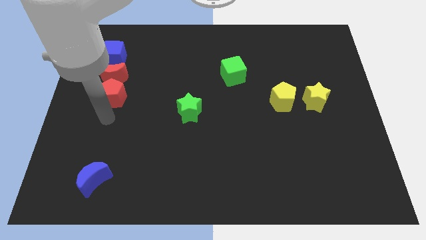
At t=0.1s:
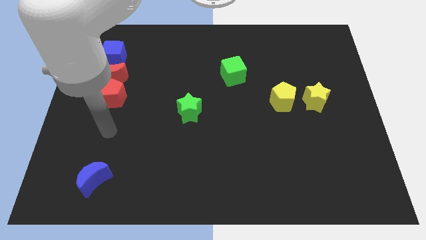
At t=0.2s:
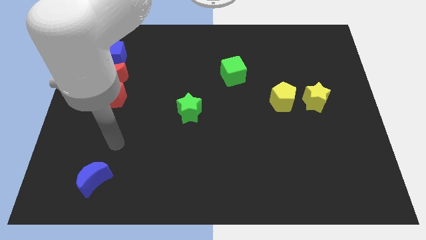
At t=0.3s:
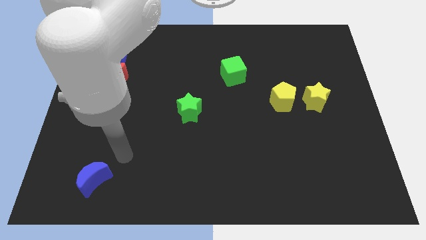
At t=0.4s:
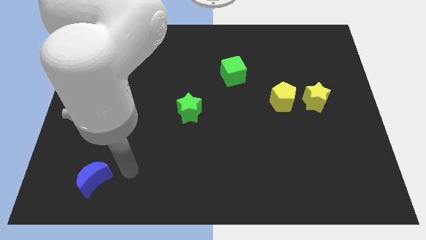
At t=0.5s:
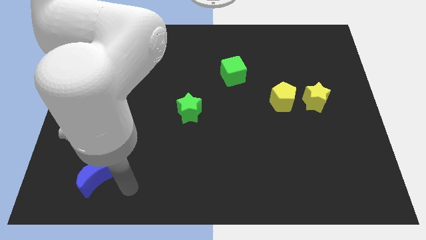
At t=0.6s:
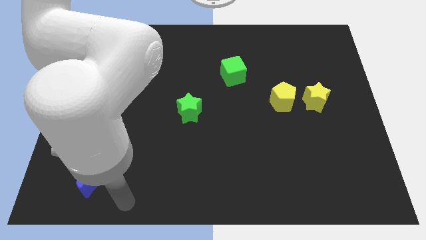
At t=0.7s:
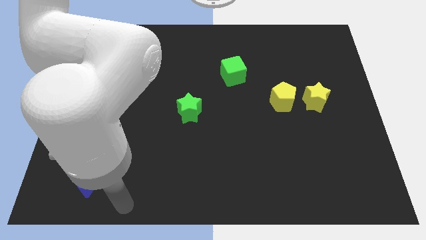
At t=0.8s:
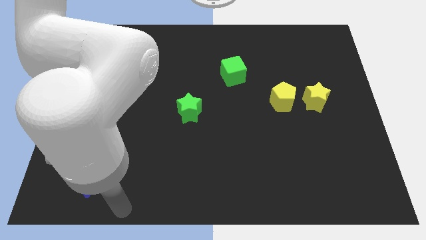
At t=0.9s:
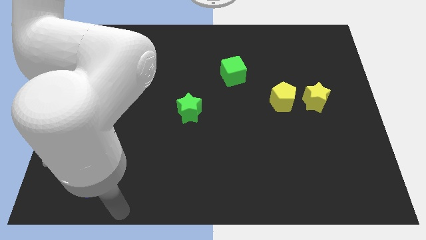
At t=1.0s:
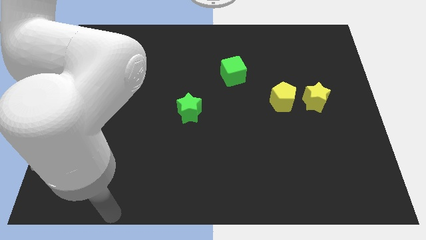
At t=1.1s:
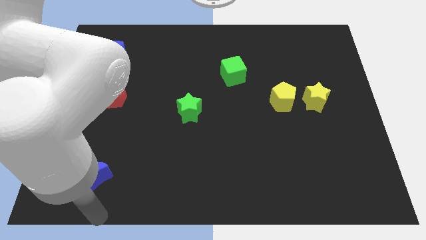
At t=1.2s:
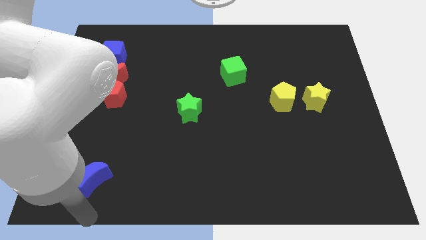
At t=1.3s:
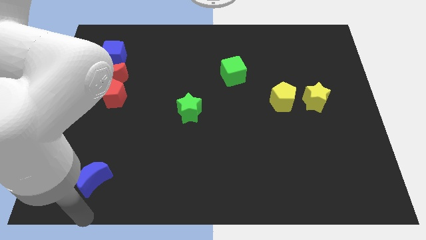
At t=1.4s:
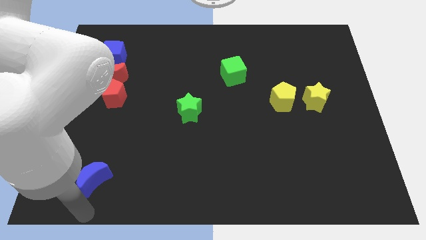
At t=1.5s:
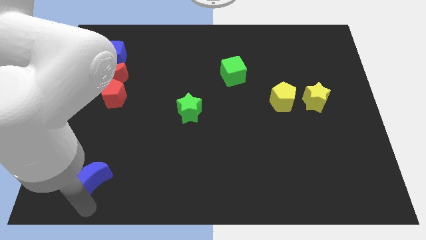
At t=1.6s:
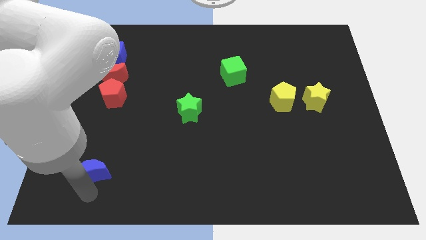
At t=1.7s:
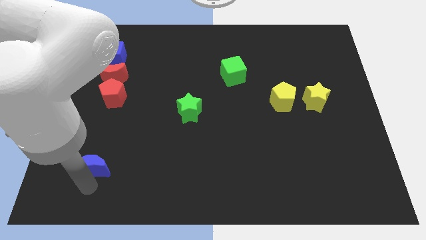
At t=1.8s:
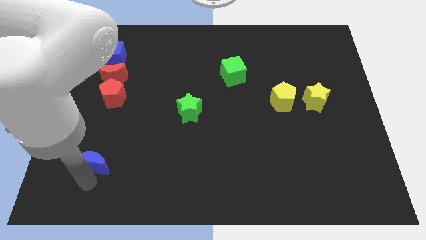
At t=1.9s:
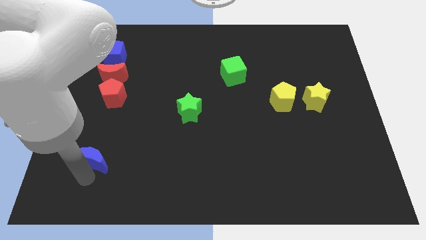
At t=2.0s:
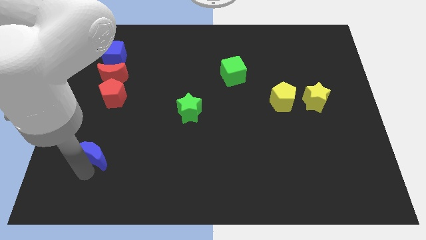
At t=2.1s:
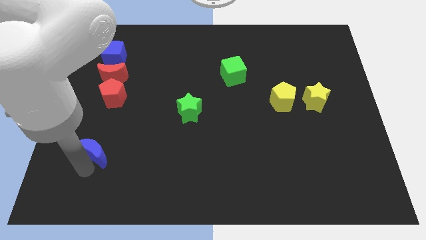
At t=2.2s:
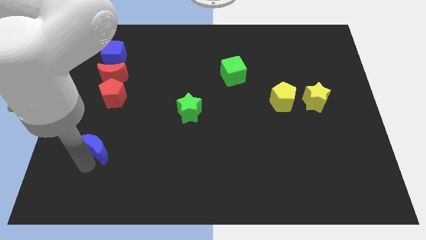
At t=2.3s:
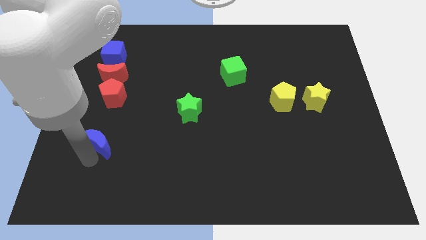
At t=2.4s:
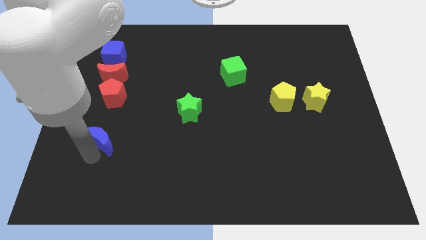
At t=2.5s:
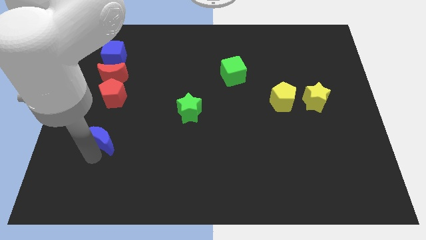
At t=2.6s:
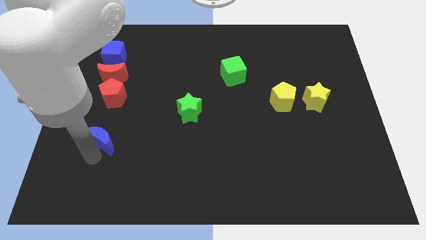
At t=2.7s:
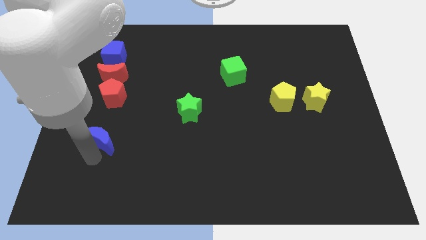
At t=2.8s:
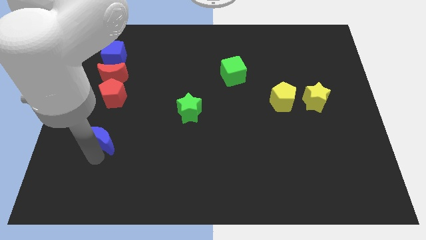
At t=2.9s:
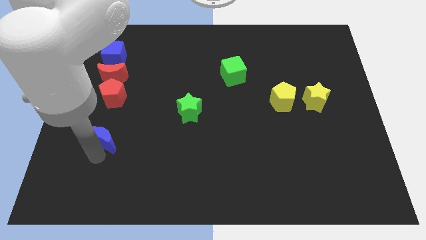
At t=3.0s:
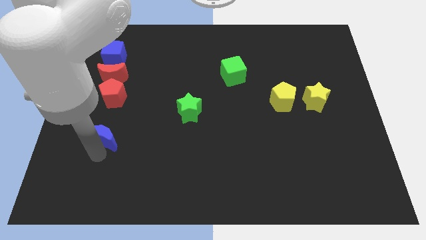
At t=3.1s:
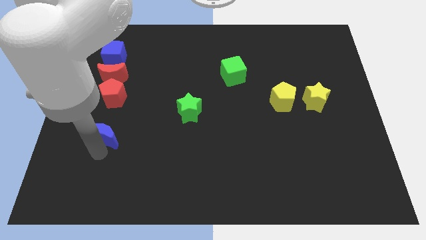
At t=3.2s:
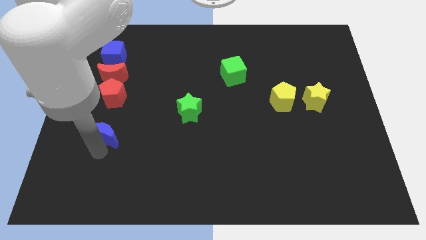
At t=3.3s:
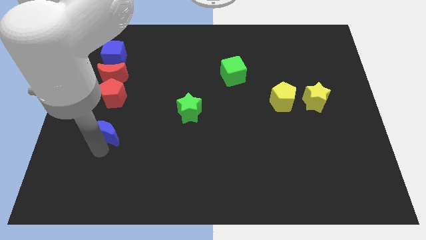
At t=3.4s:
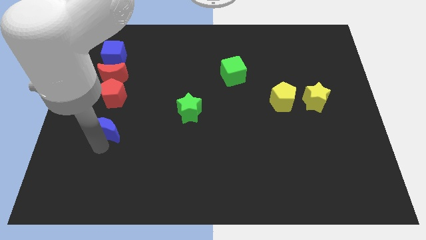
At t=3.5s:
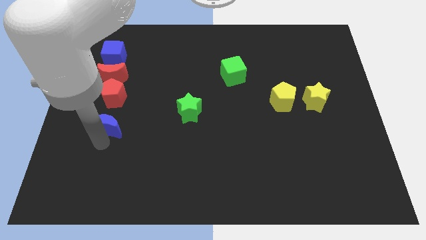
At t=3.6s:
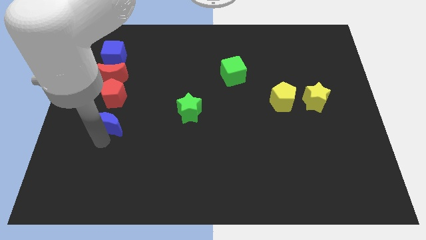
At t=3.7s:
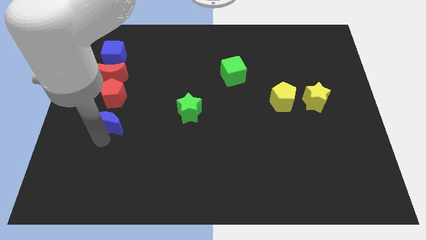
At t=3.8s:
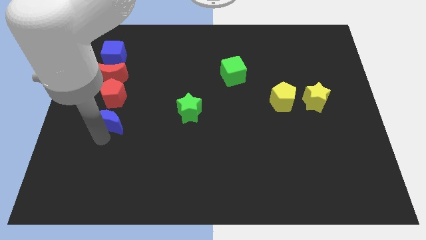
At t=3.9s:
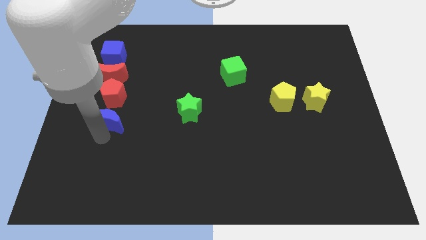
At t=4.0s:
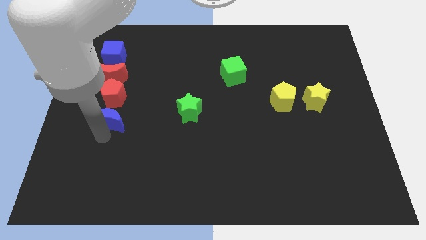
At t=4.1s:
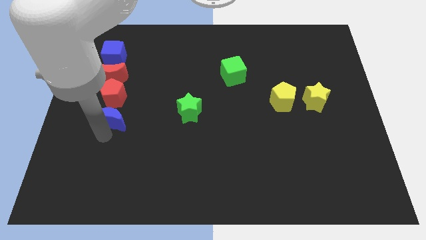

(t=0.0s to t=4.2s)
place the blue moon at the bottom of red pentagon to form a line

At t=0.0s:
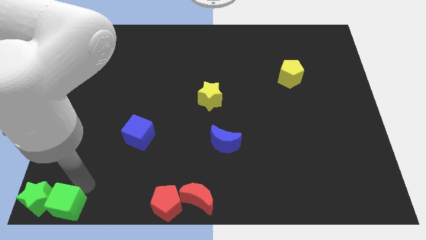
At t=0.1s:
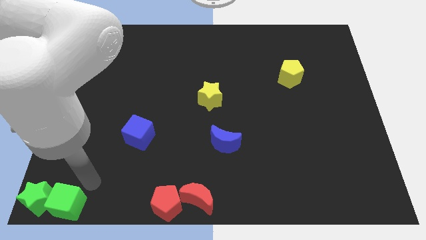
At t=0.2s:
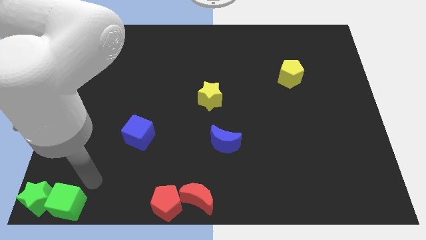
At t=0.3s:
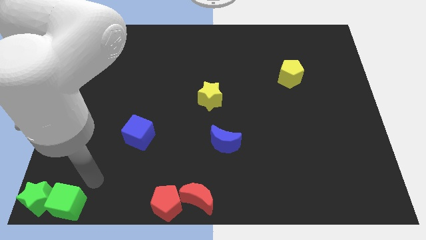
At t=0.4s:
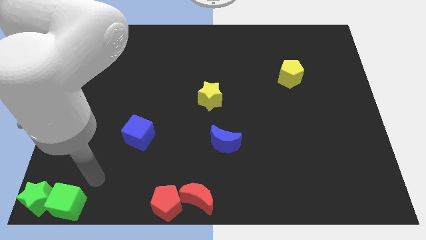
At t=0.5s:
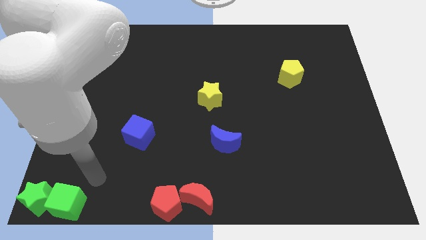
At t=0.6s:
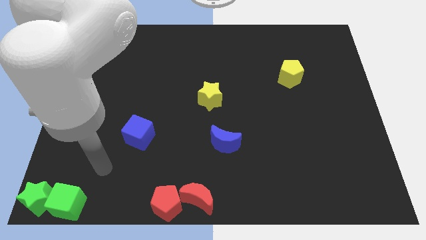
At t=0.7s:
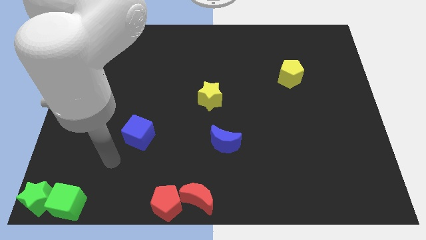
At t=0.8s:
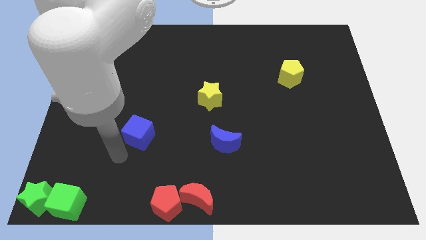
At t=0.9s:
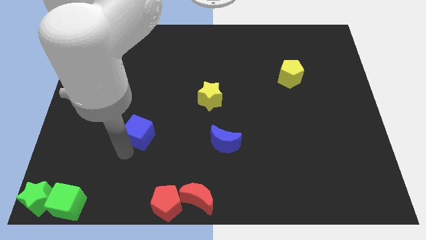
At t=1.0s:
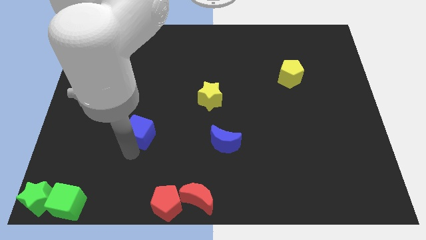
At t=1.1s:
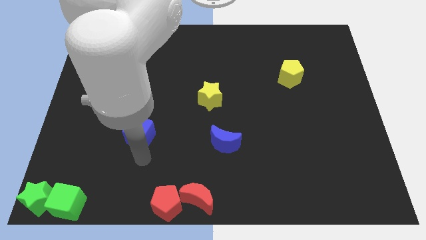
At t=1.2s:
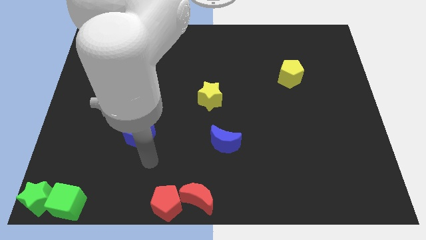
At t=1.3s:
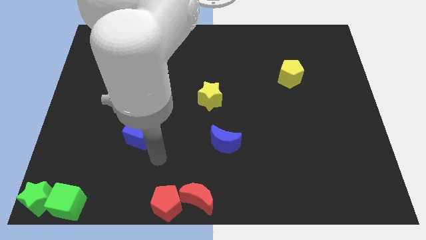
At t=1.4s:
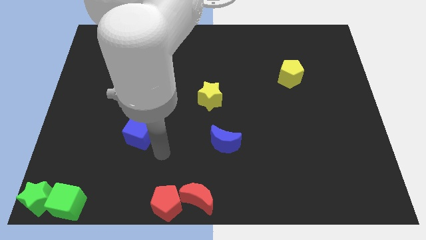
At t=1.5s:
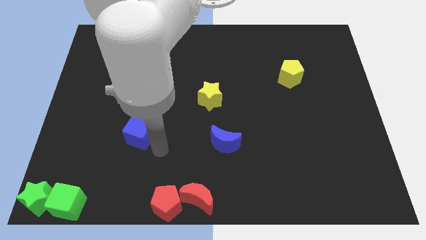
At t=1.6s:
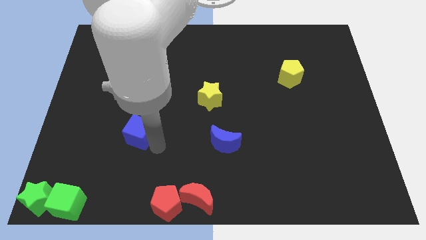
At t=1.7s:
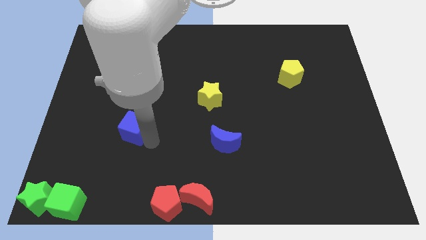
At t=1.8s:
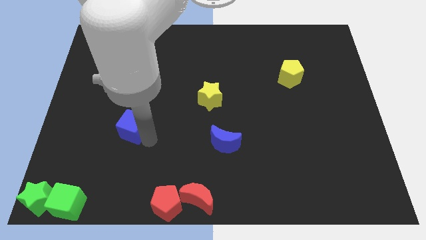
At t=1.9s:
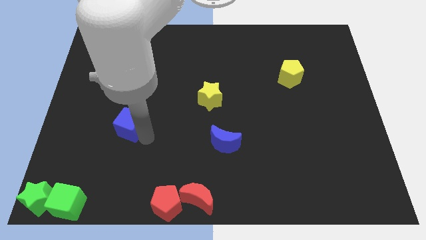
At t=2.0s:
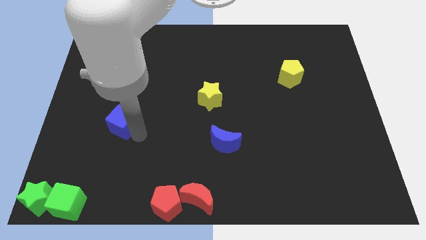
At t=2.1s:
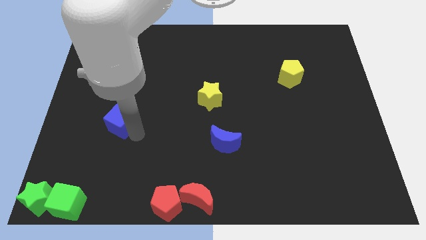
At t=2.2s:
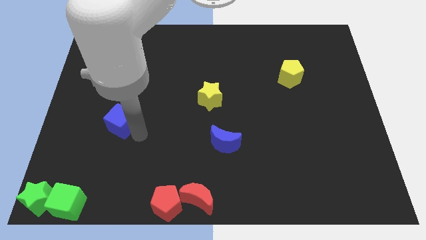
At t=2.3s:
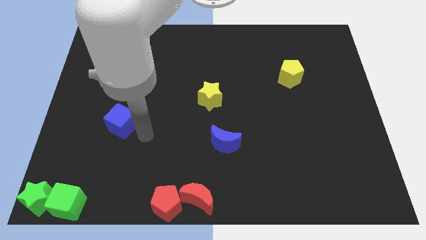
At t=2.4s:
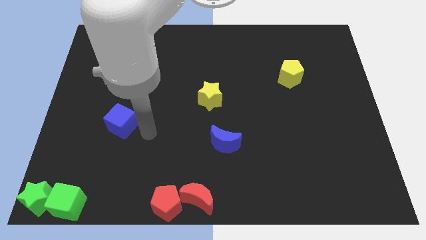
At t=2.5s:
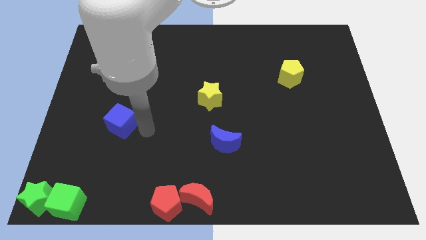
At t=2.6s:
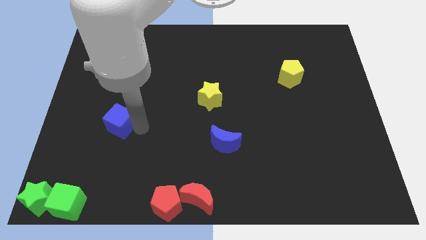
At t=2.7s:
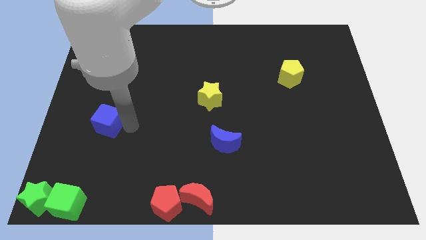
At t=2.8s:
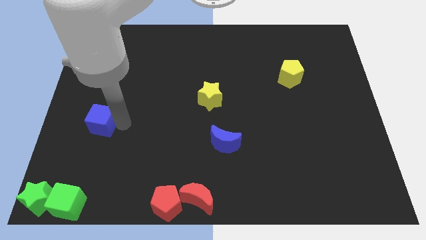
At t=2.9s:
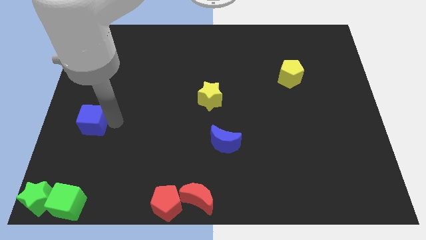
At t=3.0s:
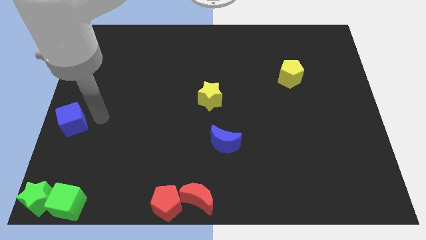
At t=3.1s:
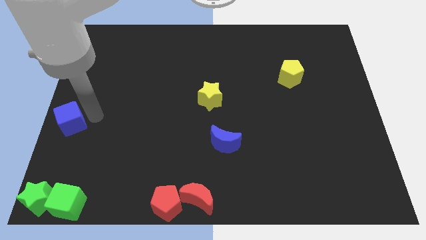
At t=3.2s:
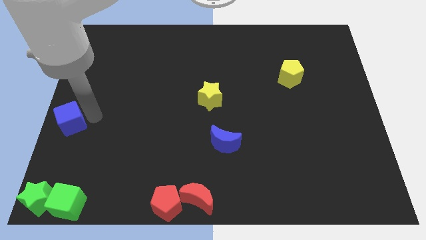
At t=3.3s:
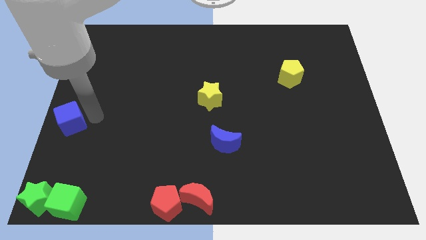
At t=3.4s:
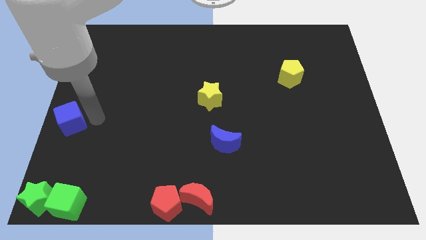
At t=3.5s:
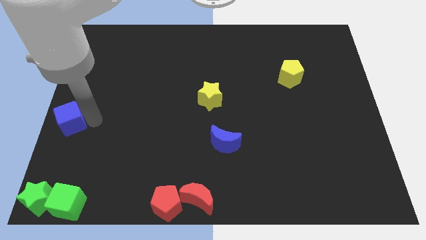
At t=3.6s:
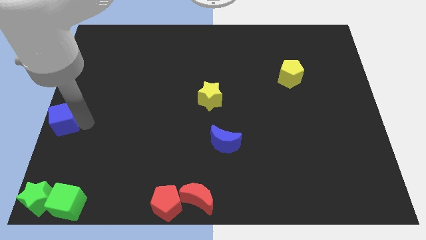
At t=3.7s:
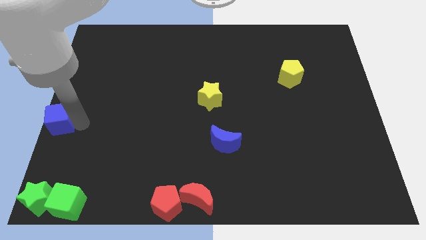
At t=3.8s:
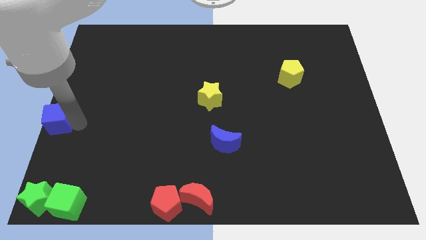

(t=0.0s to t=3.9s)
put the blue cube vertically above the green star

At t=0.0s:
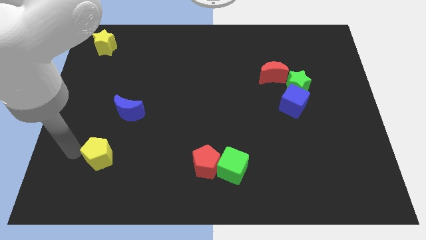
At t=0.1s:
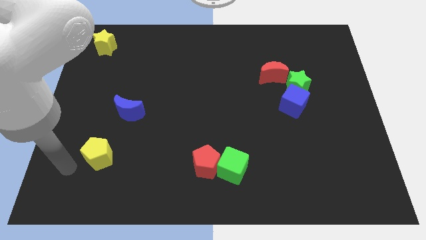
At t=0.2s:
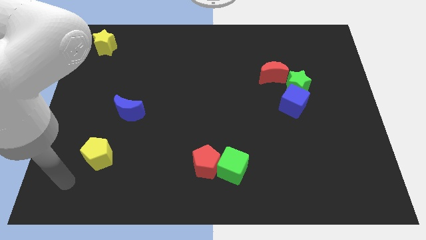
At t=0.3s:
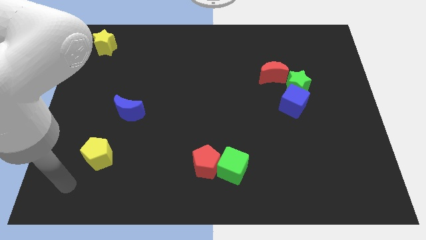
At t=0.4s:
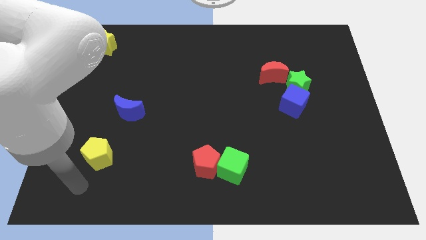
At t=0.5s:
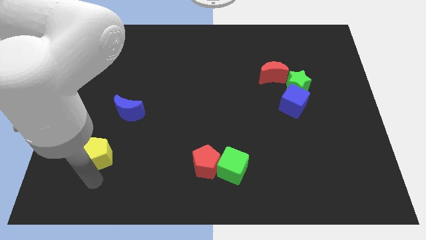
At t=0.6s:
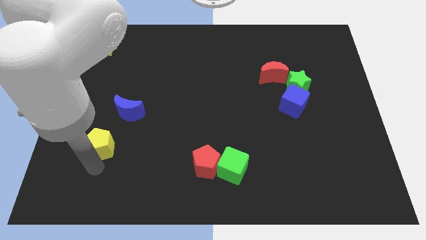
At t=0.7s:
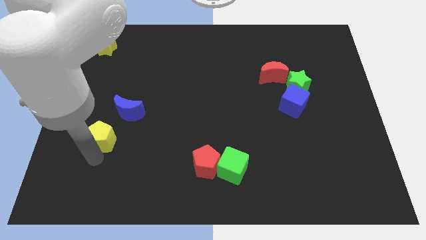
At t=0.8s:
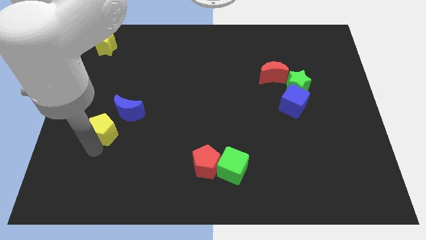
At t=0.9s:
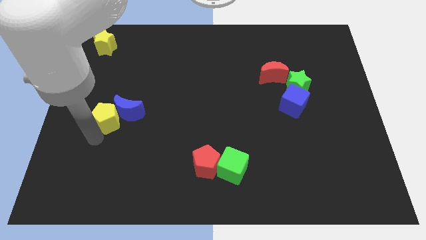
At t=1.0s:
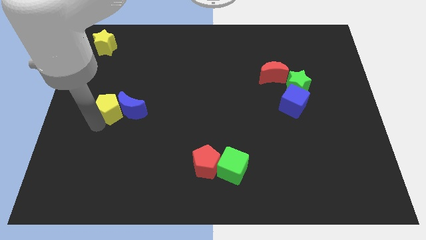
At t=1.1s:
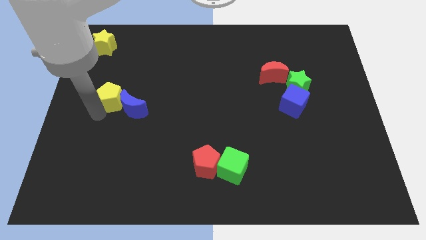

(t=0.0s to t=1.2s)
push the yellow pentagon in to the blue moon
